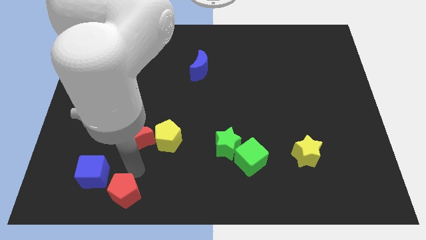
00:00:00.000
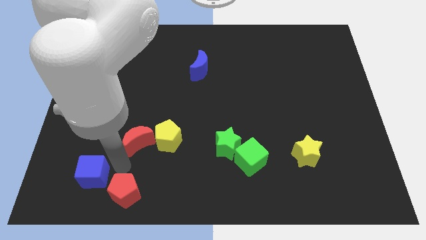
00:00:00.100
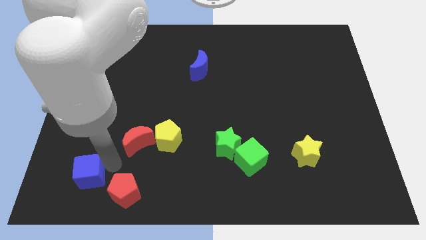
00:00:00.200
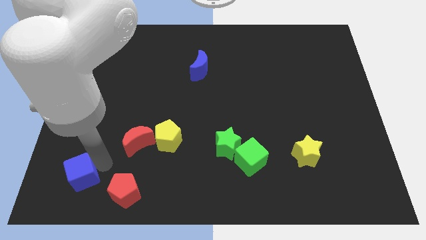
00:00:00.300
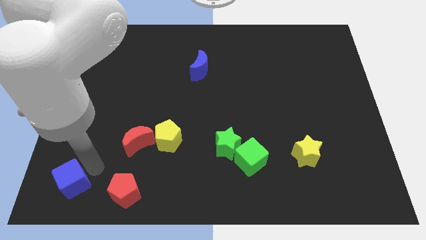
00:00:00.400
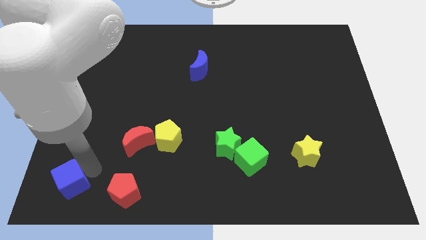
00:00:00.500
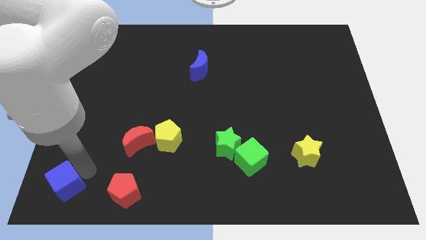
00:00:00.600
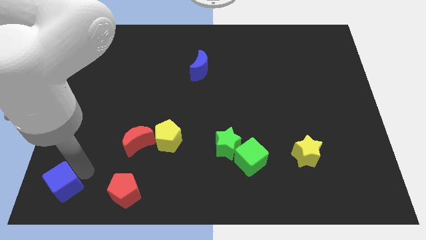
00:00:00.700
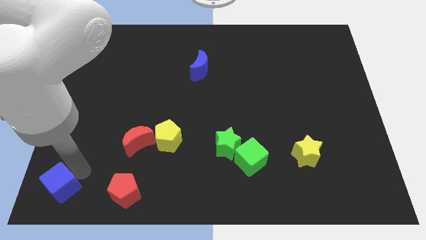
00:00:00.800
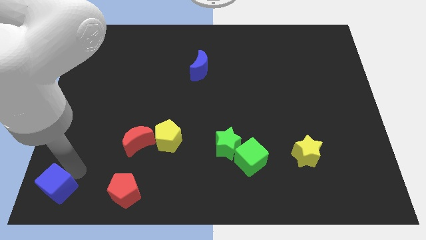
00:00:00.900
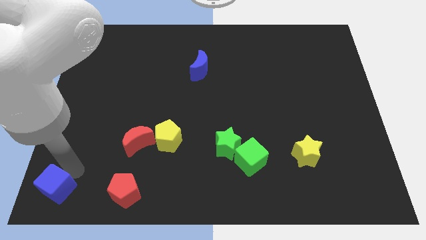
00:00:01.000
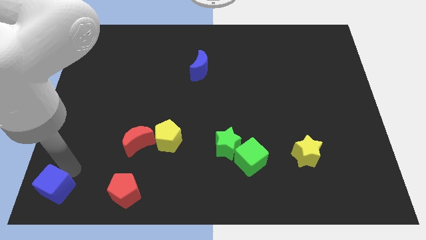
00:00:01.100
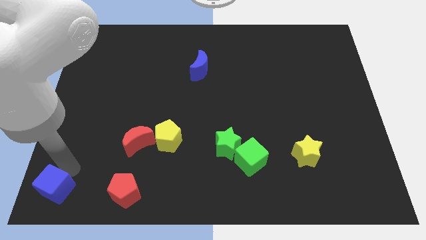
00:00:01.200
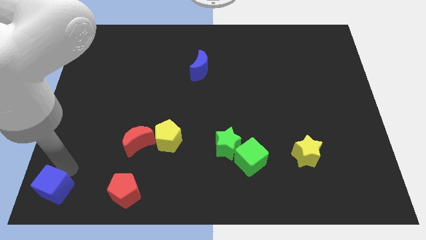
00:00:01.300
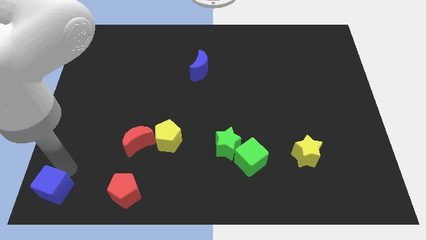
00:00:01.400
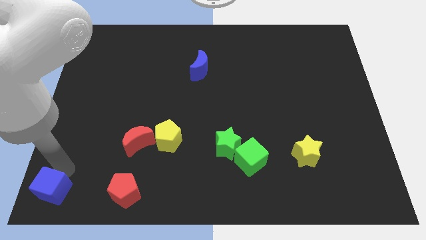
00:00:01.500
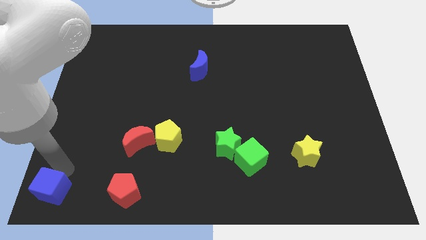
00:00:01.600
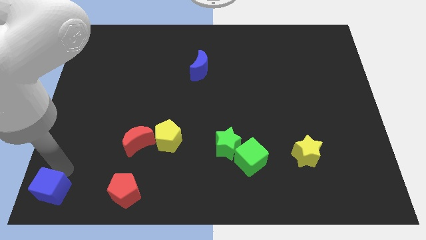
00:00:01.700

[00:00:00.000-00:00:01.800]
separate red pentagon and the blue cube

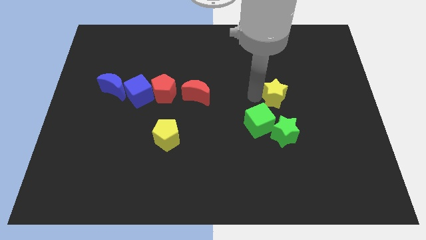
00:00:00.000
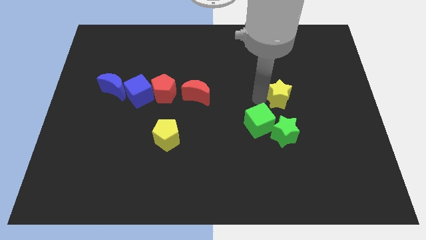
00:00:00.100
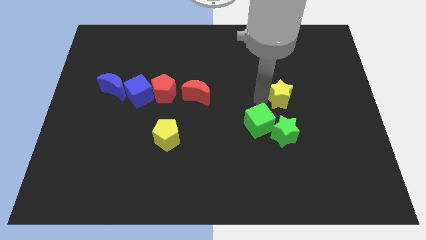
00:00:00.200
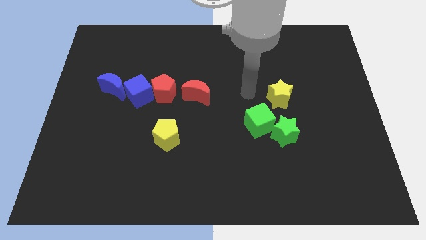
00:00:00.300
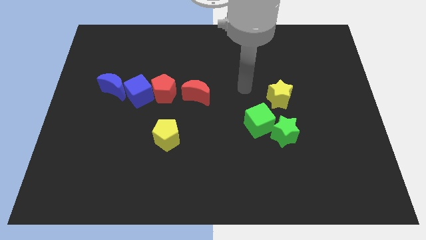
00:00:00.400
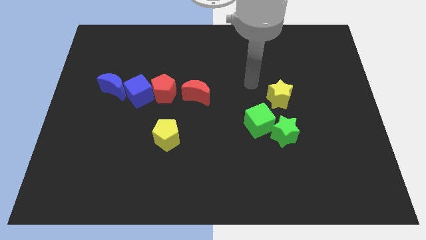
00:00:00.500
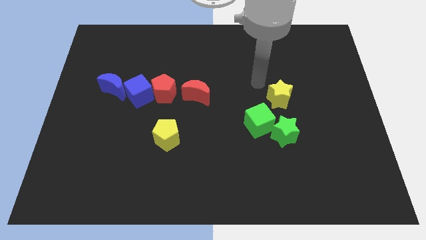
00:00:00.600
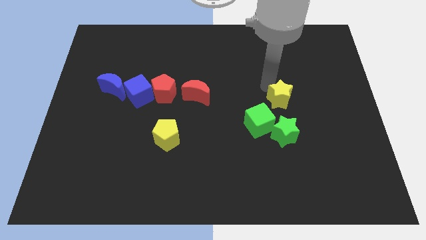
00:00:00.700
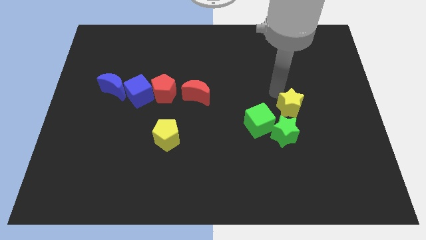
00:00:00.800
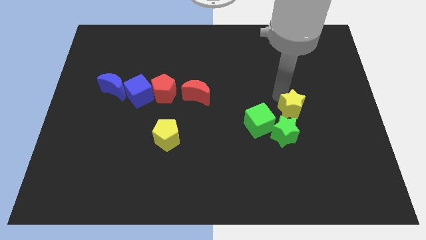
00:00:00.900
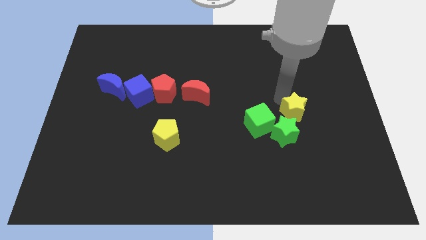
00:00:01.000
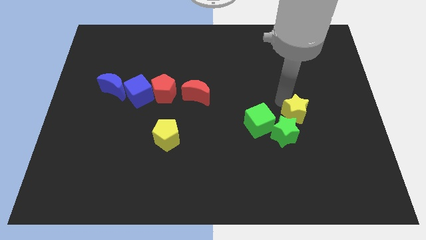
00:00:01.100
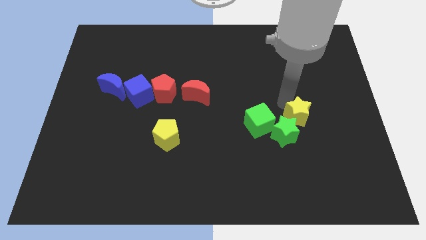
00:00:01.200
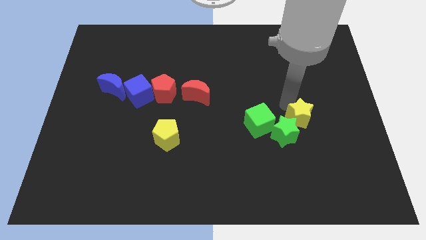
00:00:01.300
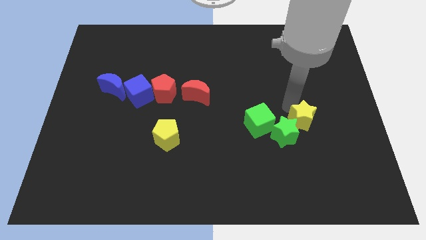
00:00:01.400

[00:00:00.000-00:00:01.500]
move yellow star near green star

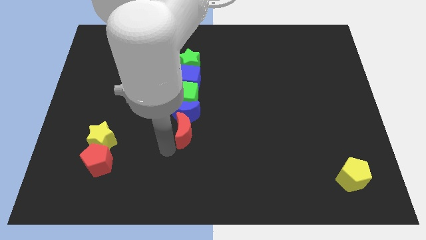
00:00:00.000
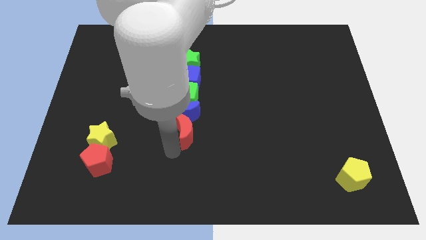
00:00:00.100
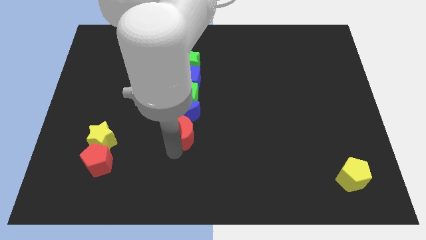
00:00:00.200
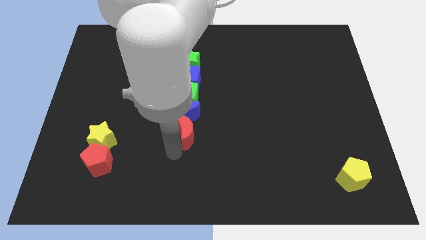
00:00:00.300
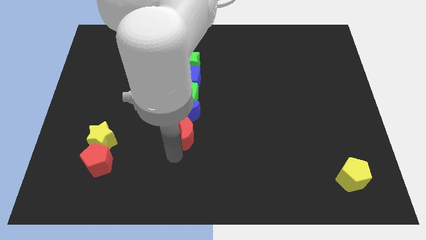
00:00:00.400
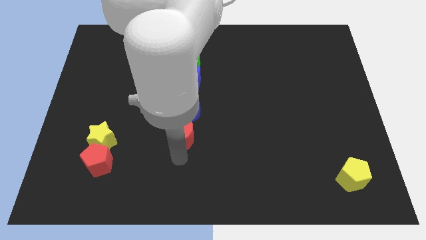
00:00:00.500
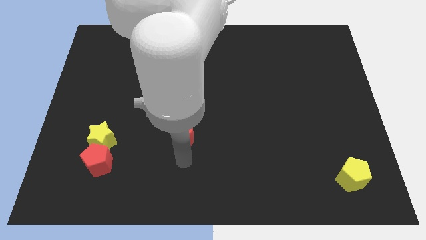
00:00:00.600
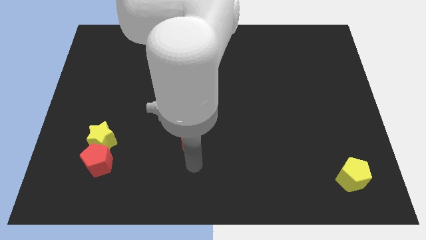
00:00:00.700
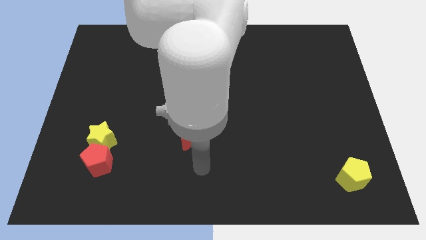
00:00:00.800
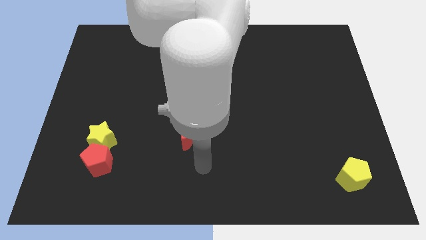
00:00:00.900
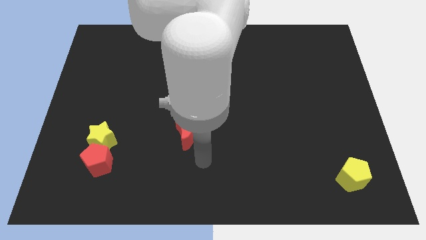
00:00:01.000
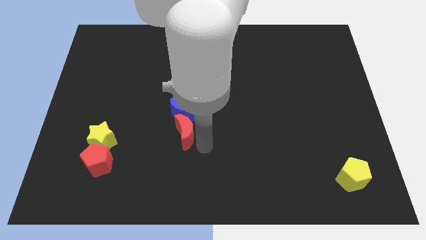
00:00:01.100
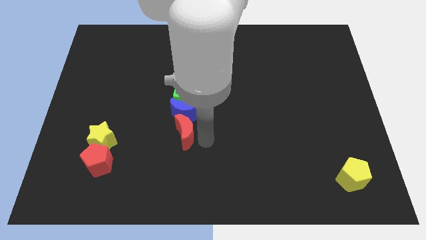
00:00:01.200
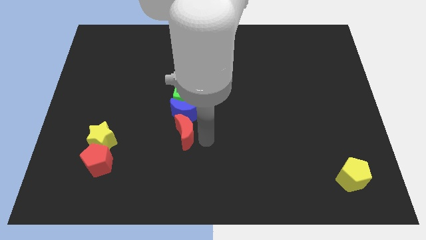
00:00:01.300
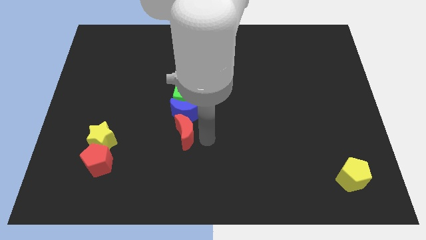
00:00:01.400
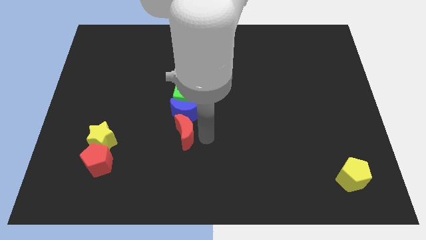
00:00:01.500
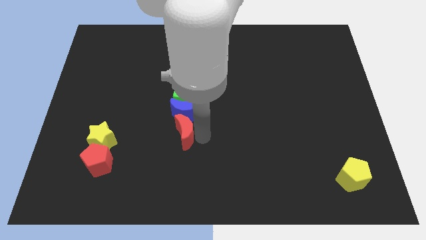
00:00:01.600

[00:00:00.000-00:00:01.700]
move your arm to the right of the red crescent

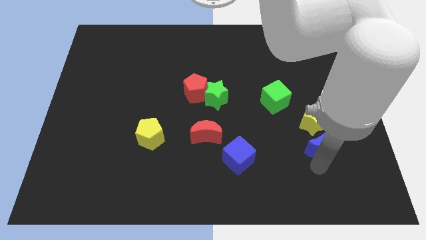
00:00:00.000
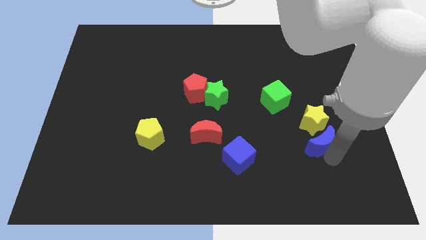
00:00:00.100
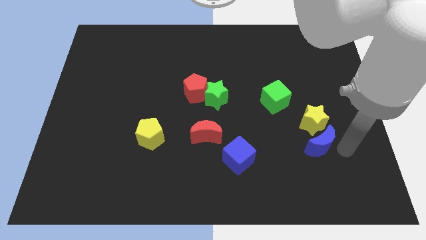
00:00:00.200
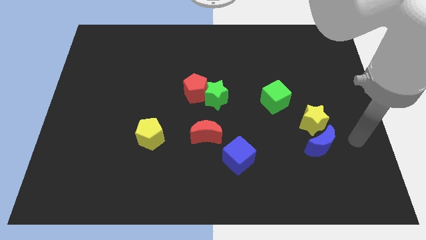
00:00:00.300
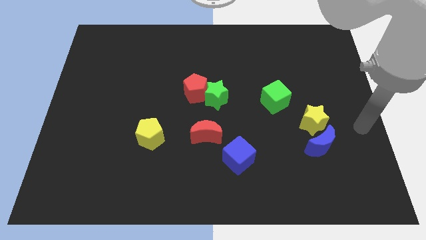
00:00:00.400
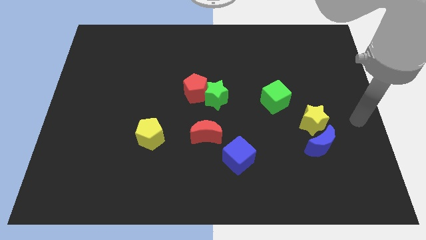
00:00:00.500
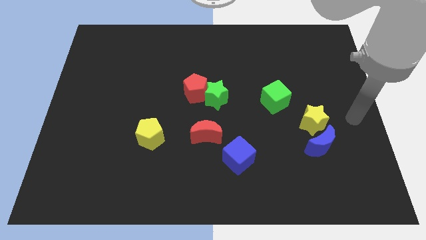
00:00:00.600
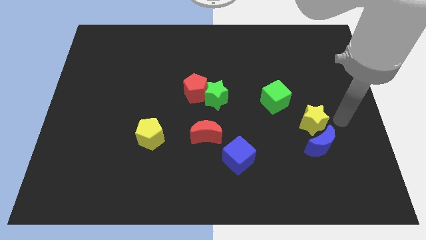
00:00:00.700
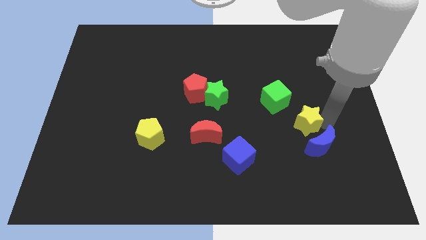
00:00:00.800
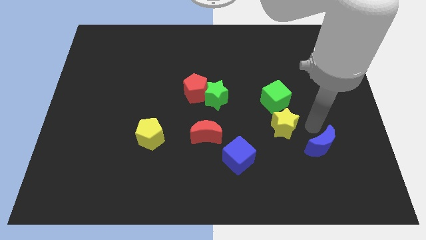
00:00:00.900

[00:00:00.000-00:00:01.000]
touch yellow star on right side

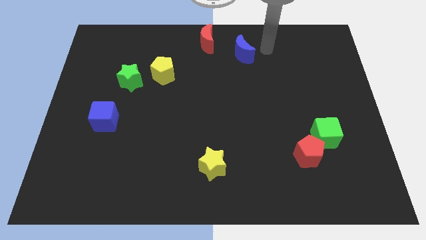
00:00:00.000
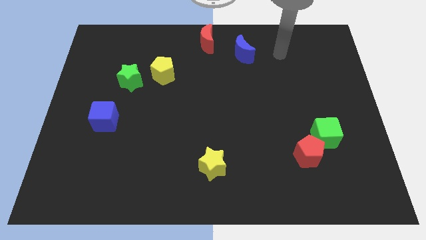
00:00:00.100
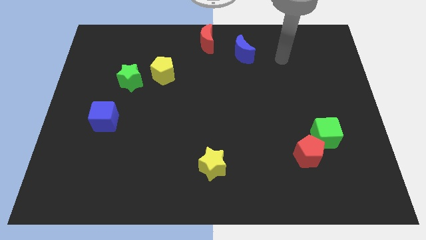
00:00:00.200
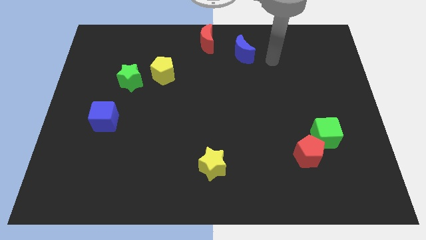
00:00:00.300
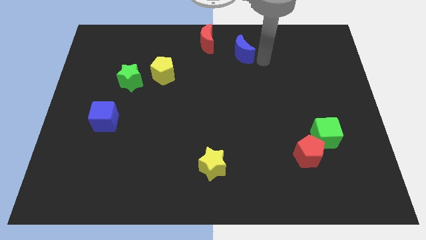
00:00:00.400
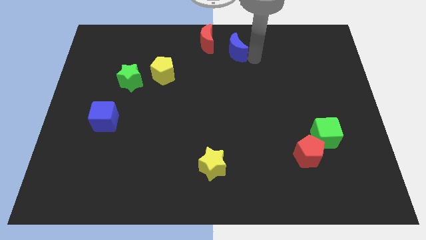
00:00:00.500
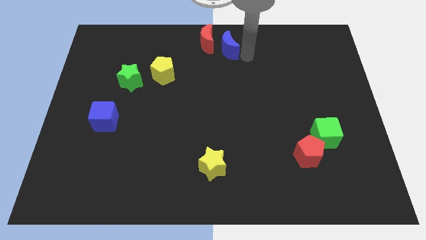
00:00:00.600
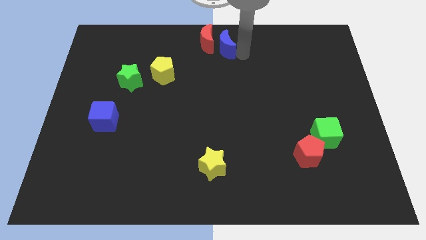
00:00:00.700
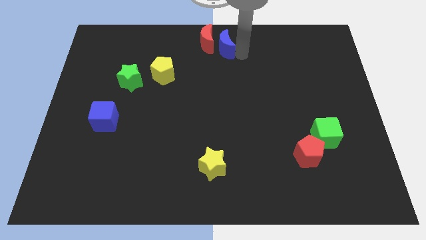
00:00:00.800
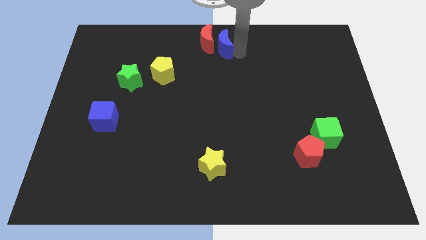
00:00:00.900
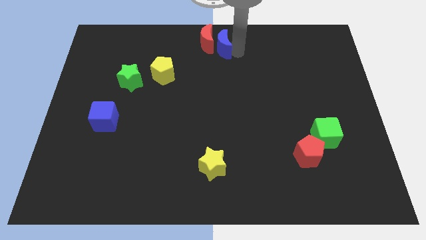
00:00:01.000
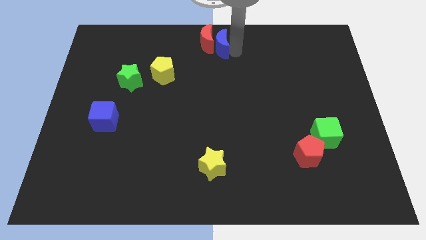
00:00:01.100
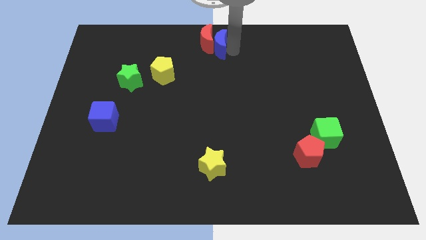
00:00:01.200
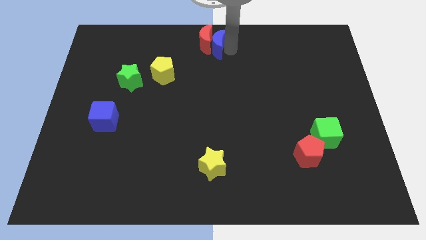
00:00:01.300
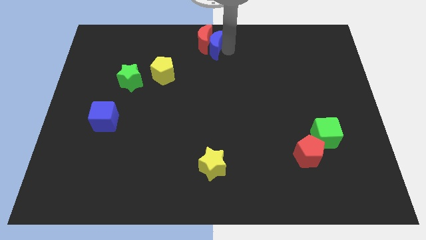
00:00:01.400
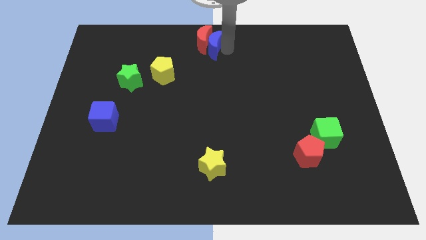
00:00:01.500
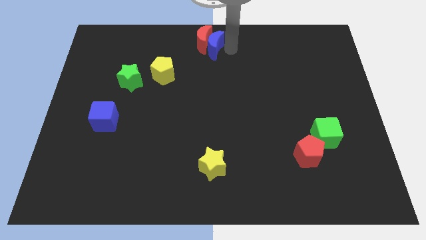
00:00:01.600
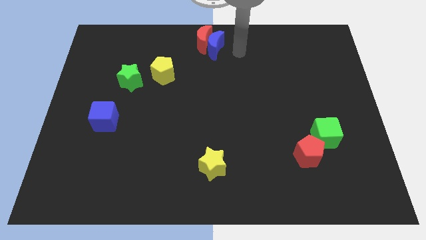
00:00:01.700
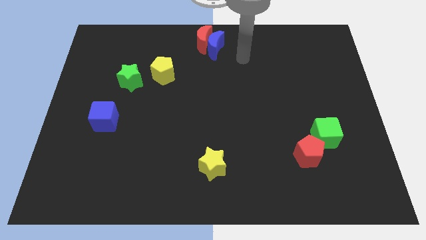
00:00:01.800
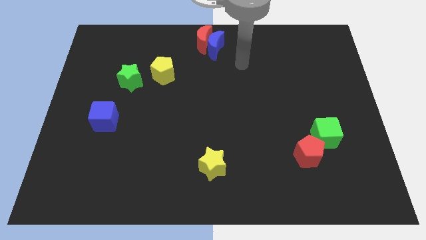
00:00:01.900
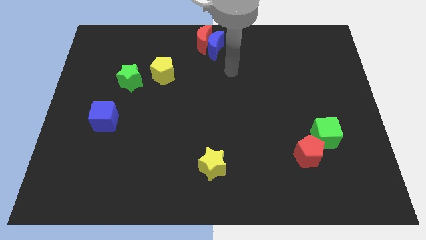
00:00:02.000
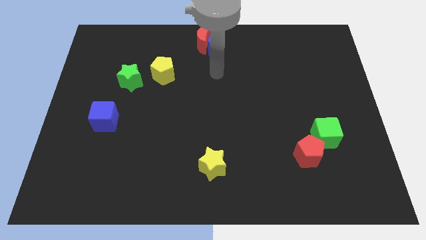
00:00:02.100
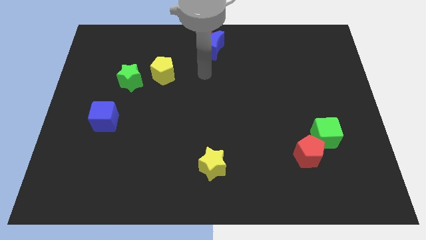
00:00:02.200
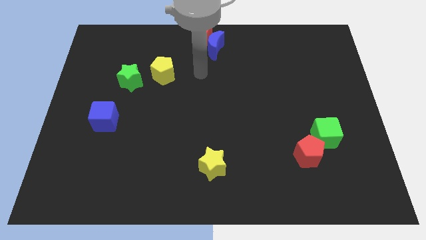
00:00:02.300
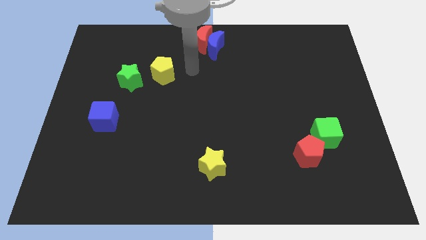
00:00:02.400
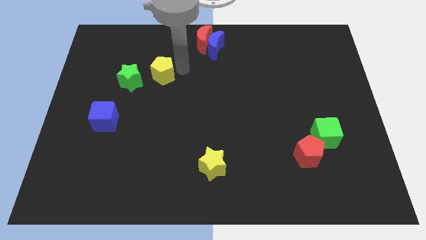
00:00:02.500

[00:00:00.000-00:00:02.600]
push the blue crescent into the red crescent from the right

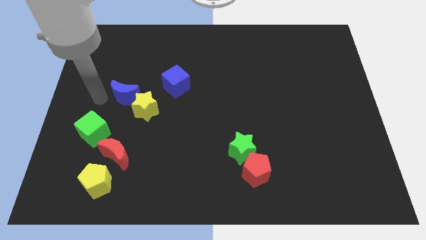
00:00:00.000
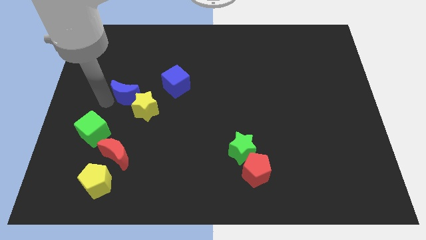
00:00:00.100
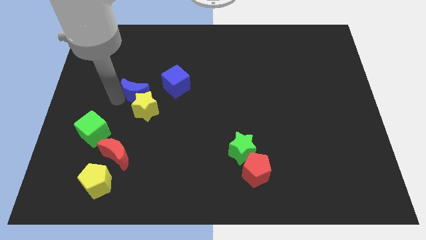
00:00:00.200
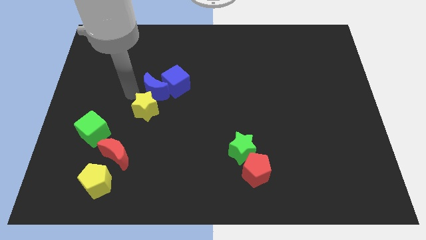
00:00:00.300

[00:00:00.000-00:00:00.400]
place blue crescent above yellow star

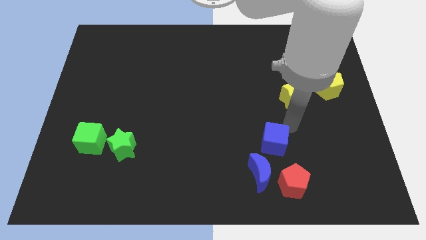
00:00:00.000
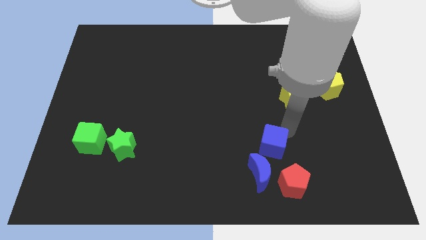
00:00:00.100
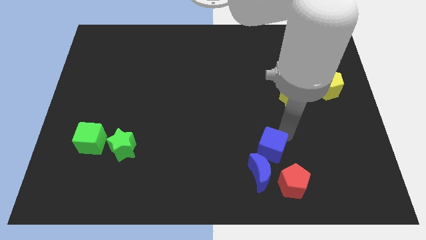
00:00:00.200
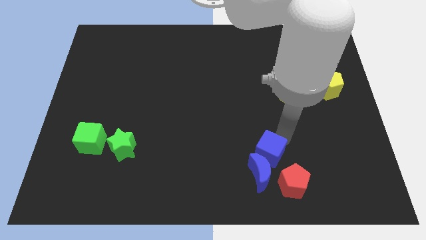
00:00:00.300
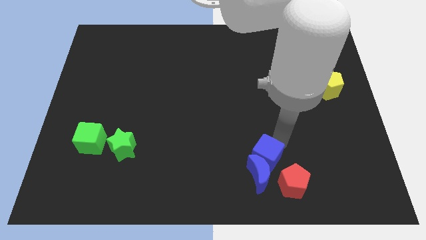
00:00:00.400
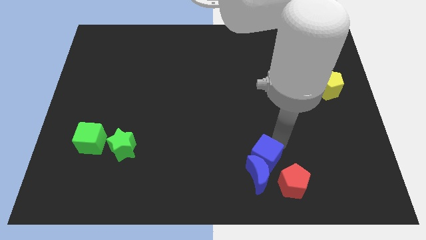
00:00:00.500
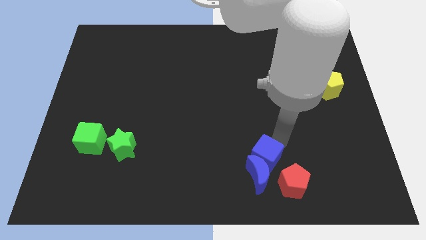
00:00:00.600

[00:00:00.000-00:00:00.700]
push the blue cube into the blue moon
